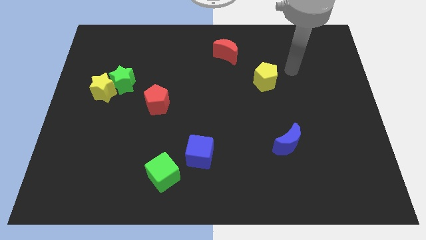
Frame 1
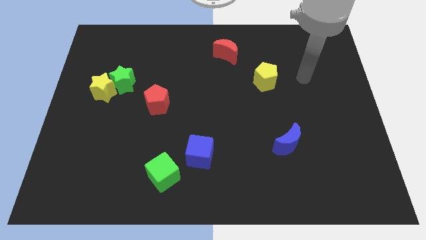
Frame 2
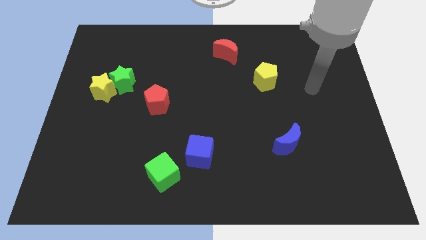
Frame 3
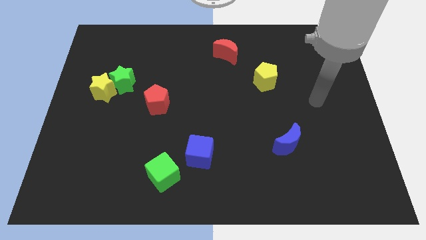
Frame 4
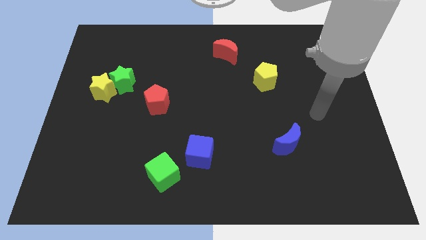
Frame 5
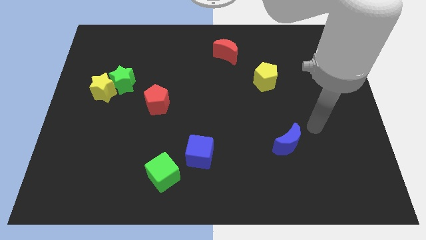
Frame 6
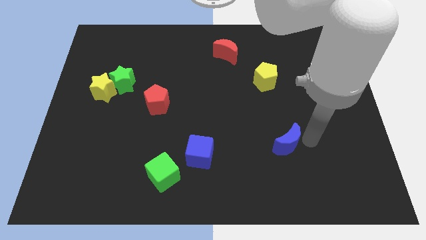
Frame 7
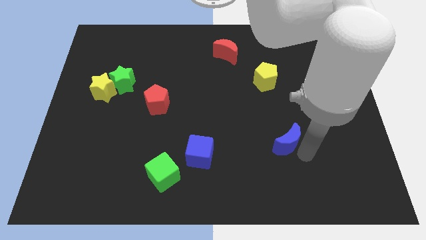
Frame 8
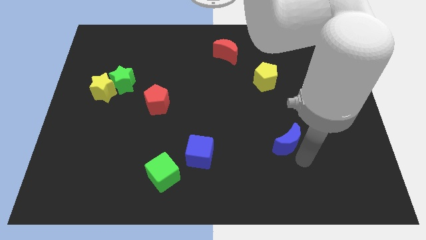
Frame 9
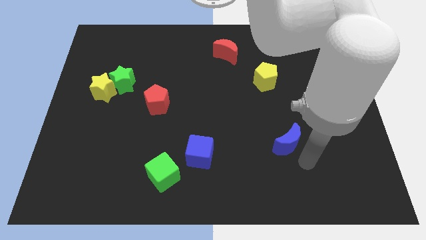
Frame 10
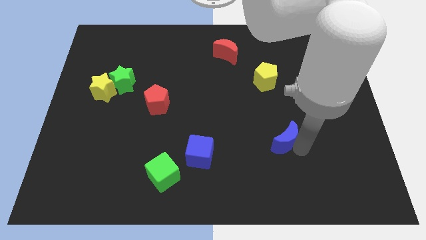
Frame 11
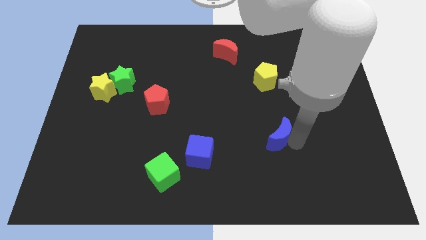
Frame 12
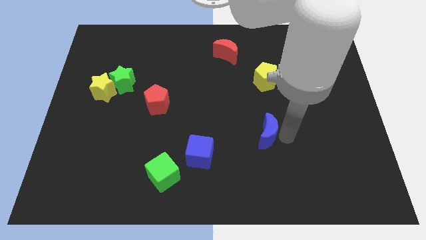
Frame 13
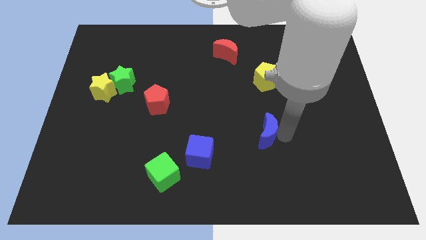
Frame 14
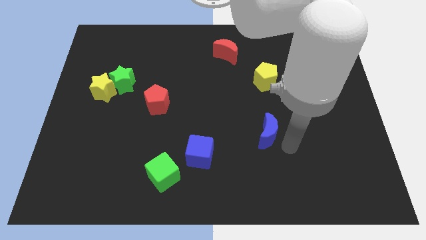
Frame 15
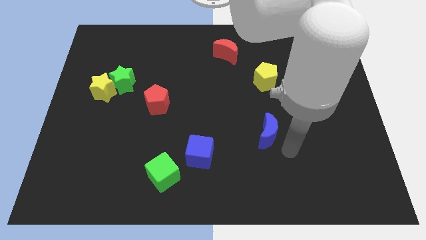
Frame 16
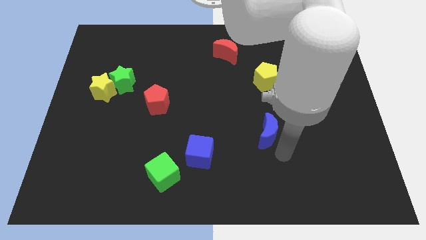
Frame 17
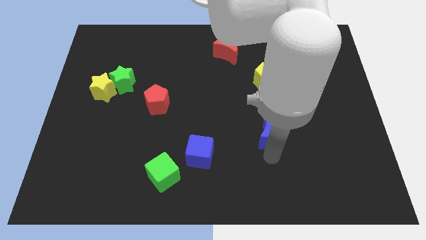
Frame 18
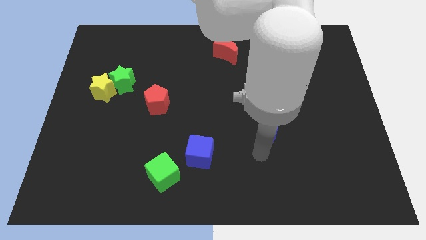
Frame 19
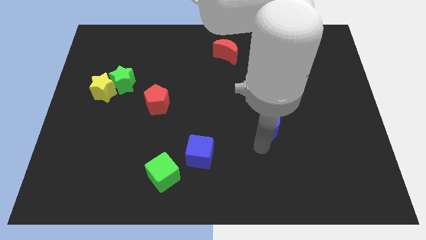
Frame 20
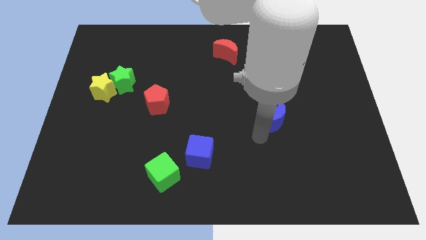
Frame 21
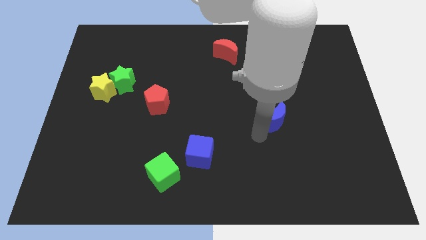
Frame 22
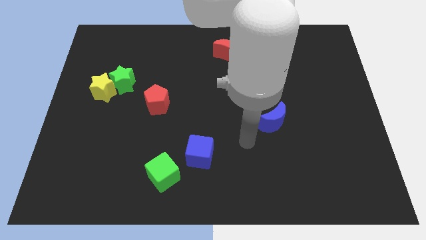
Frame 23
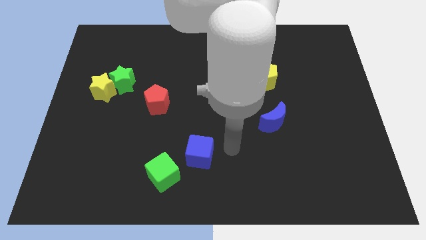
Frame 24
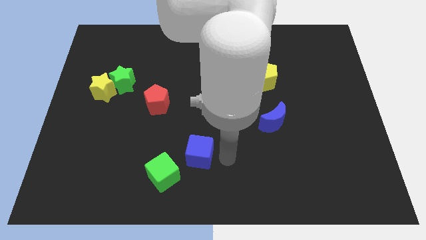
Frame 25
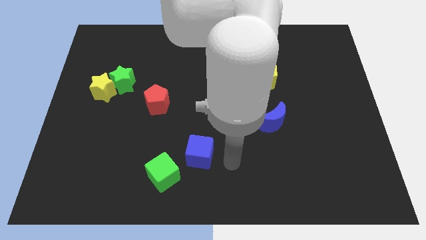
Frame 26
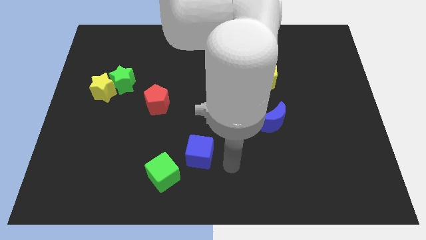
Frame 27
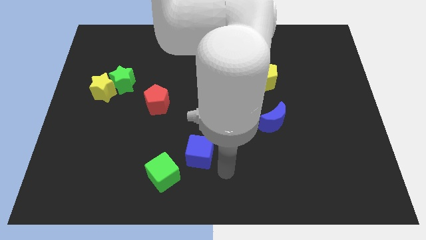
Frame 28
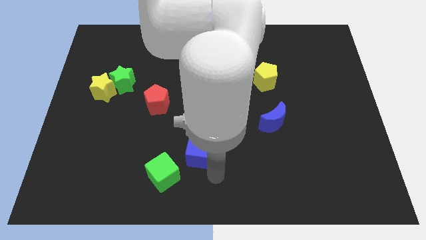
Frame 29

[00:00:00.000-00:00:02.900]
move blue crescent to the bottom of yellow pentagon

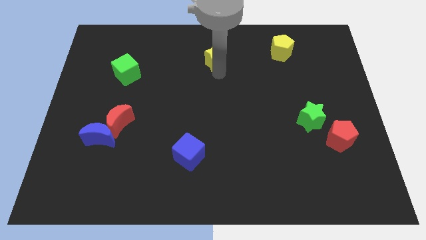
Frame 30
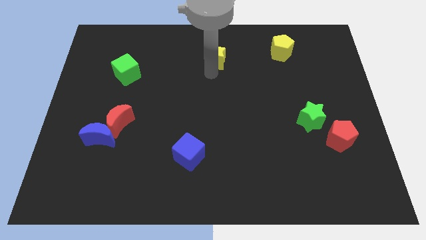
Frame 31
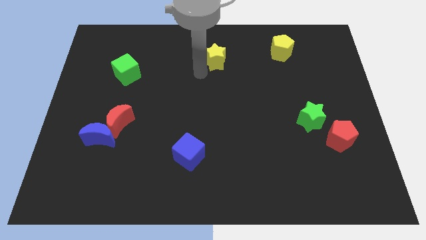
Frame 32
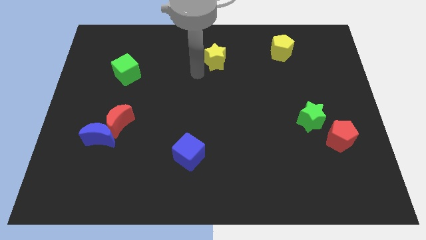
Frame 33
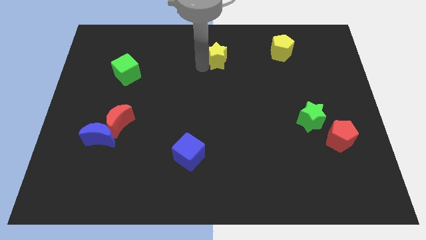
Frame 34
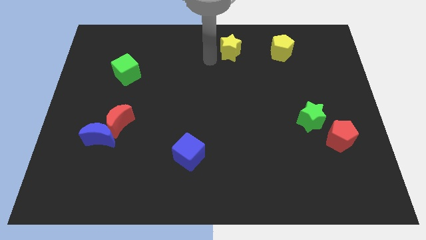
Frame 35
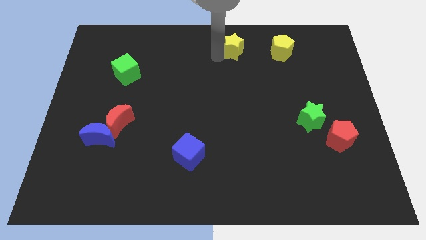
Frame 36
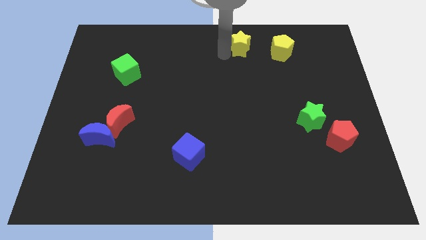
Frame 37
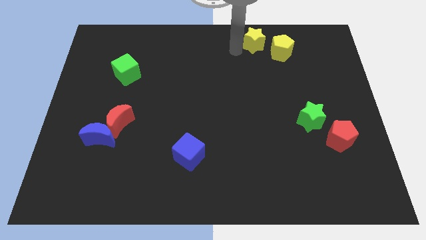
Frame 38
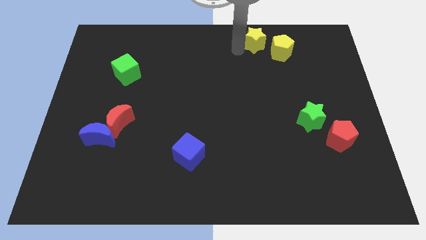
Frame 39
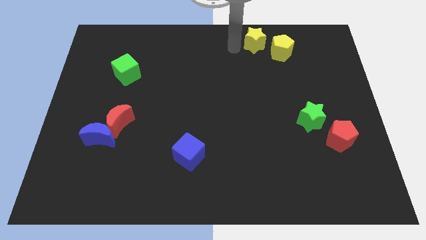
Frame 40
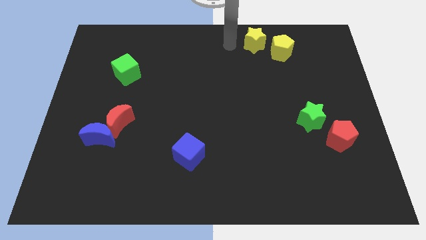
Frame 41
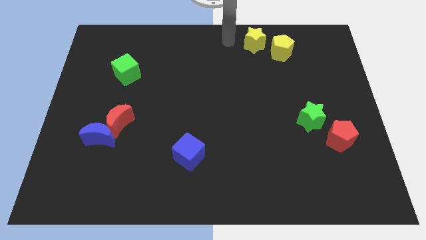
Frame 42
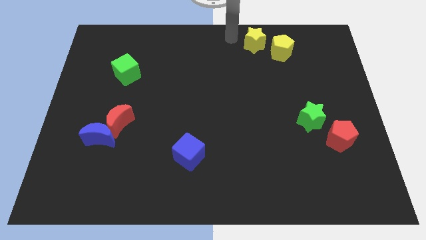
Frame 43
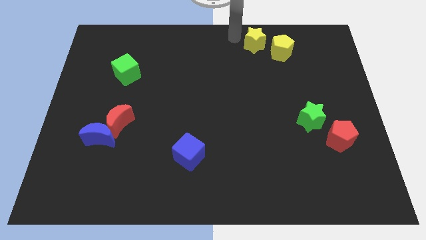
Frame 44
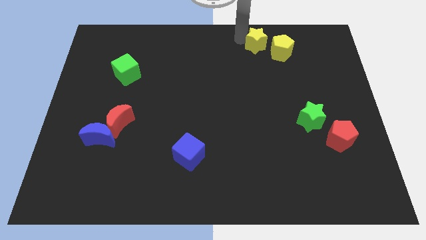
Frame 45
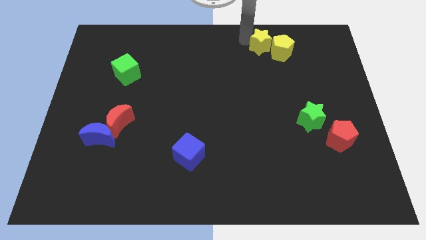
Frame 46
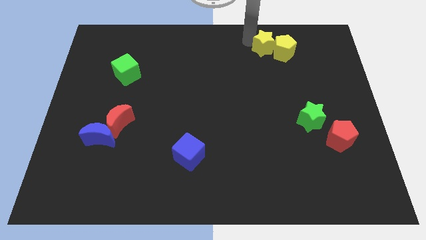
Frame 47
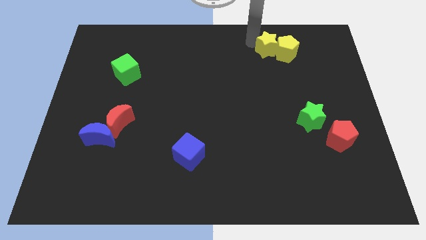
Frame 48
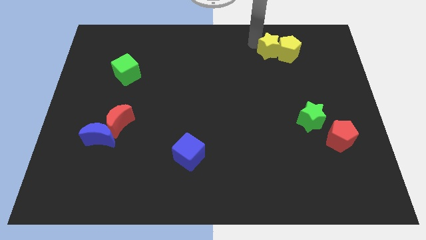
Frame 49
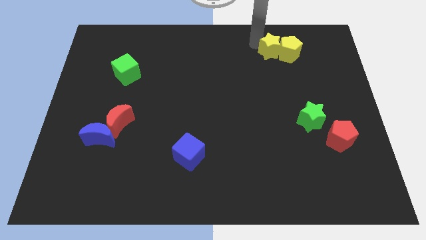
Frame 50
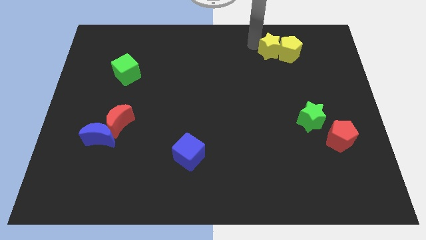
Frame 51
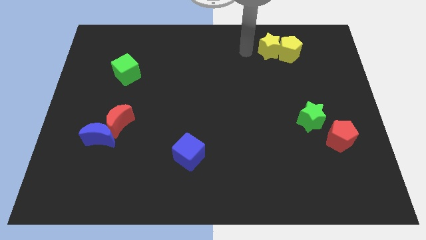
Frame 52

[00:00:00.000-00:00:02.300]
push the yellow star into the yellow pentagon

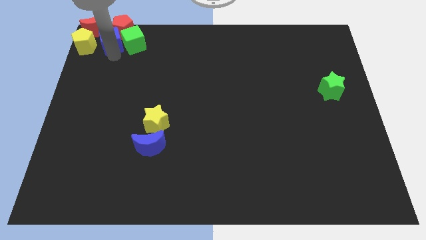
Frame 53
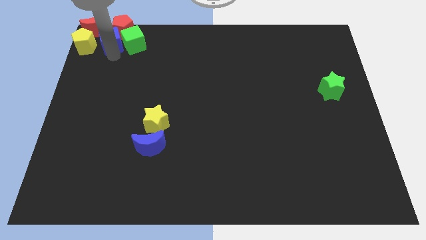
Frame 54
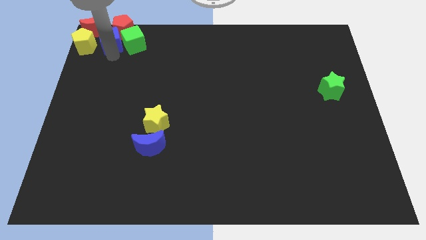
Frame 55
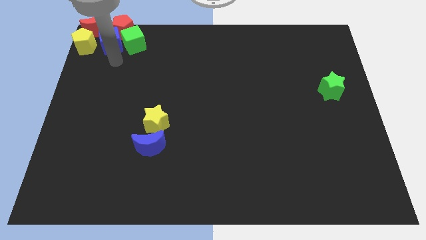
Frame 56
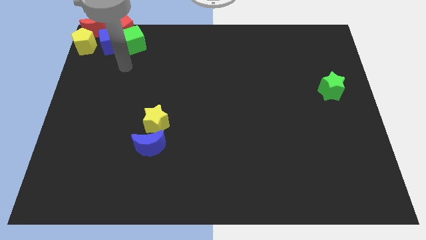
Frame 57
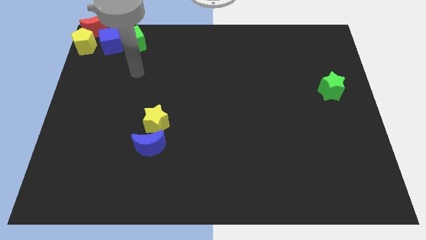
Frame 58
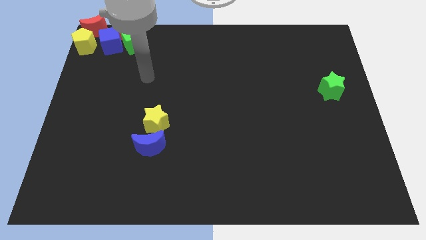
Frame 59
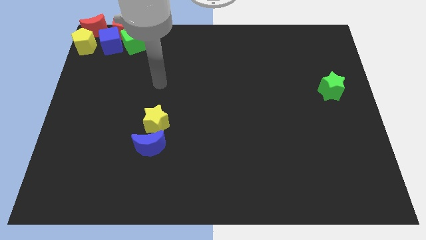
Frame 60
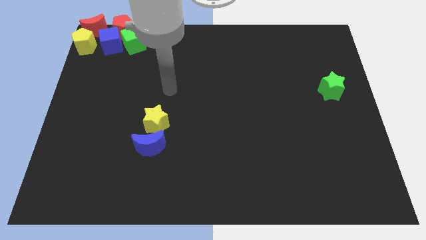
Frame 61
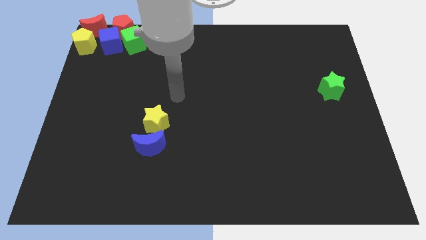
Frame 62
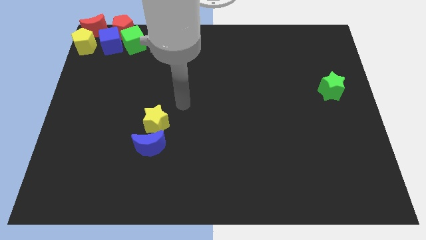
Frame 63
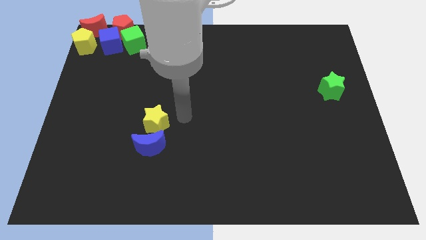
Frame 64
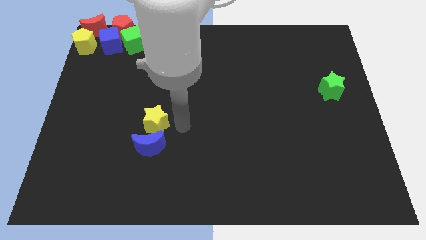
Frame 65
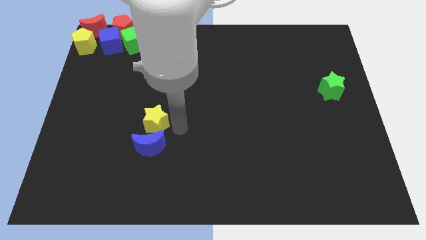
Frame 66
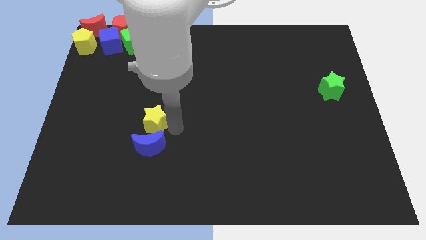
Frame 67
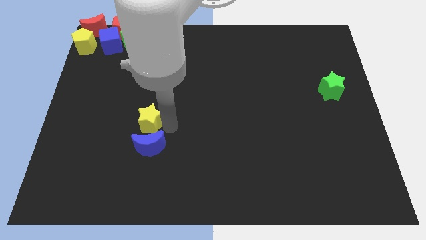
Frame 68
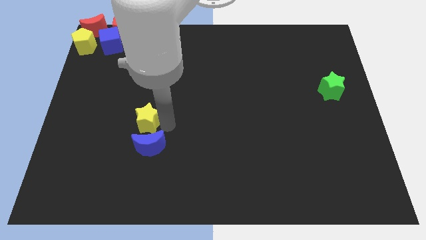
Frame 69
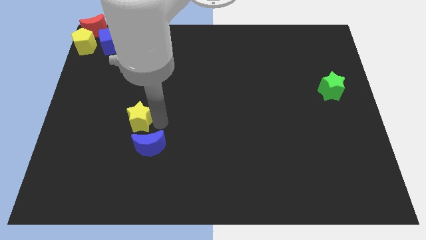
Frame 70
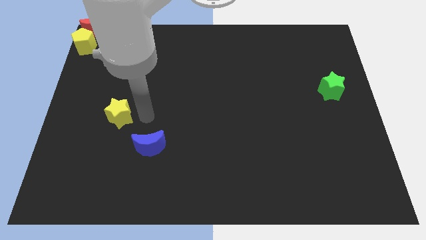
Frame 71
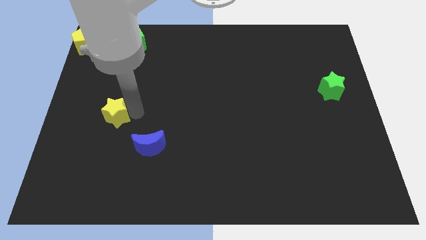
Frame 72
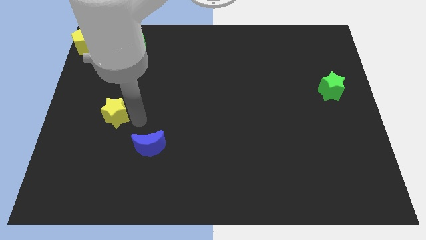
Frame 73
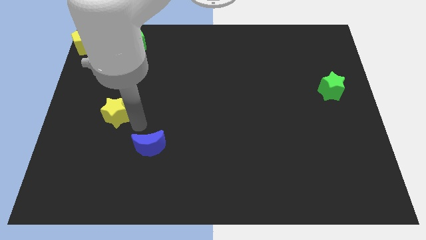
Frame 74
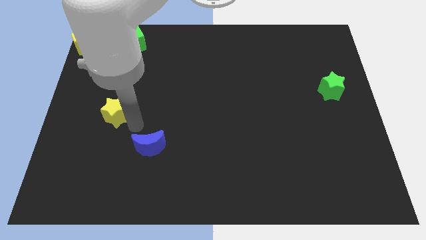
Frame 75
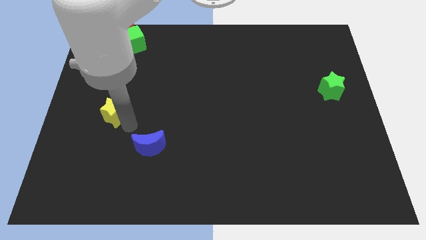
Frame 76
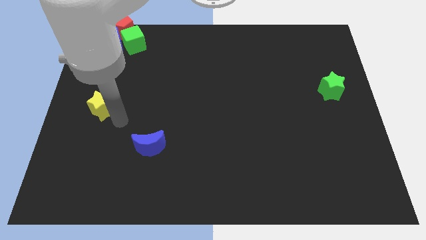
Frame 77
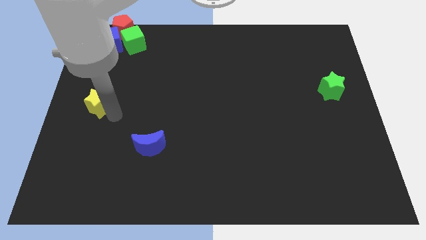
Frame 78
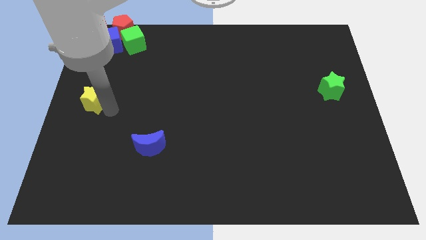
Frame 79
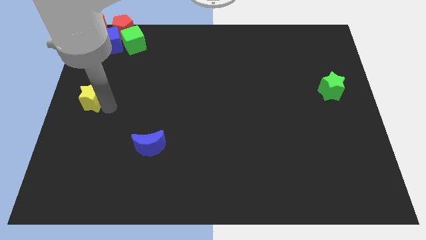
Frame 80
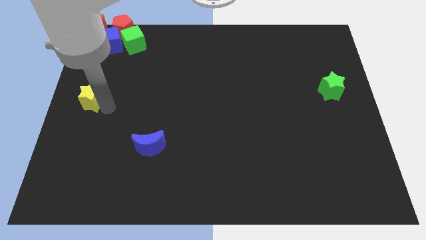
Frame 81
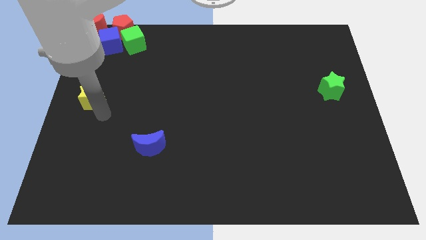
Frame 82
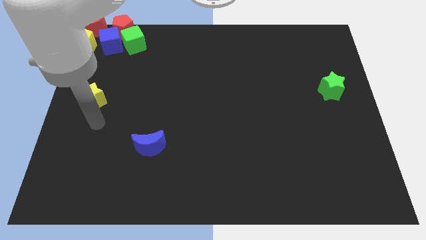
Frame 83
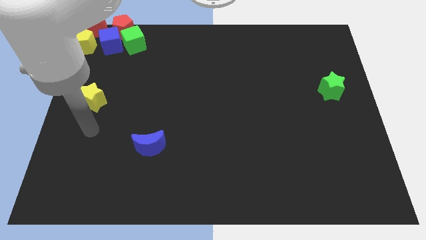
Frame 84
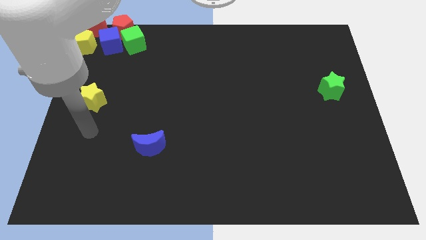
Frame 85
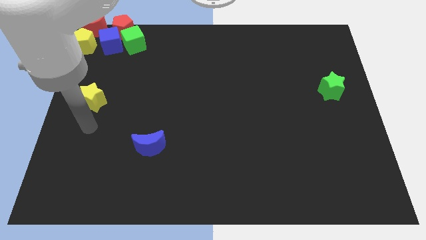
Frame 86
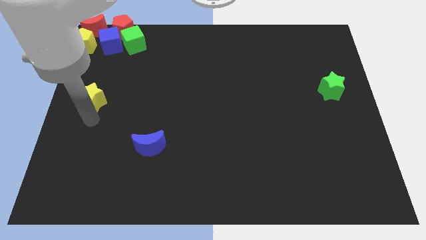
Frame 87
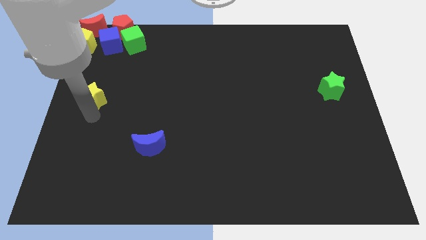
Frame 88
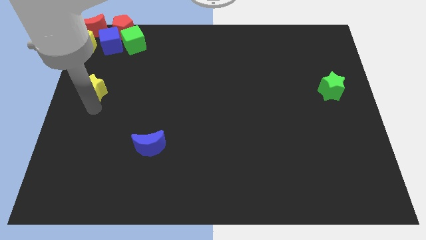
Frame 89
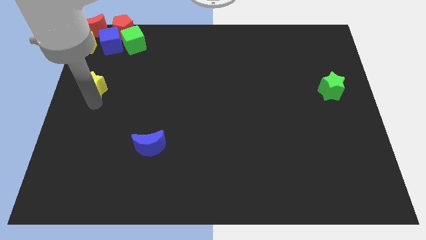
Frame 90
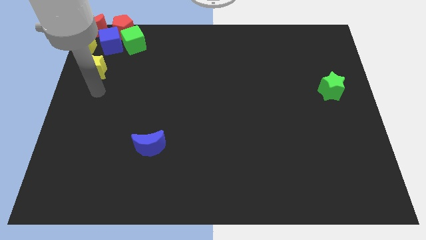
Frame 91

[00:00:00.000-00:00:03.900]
move the yellow star towards top

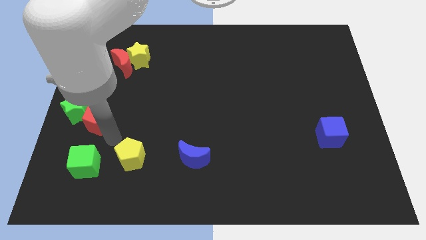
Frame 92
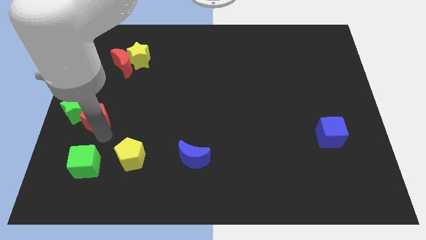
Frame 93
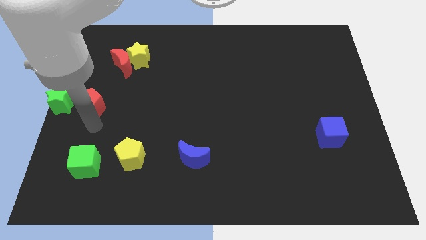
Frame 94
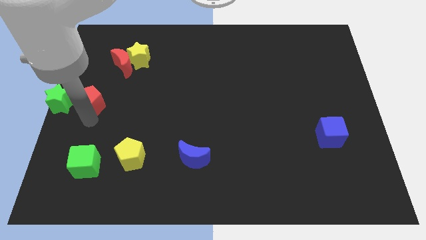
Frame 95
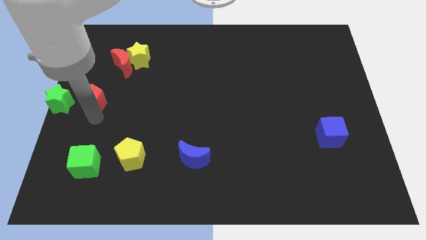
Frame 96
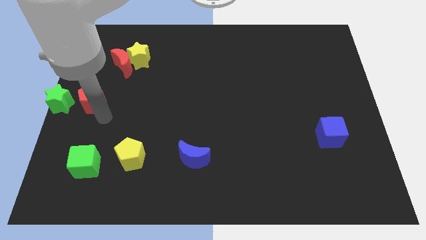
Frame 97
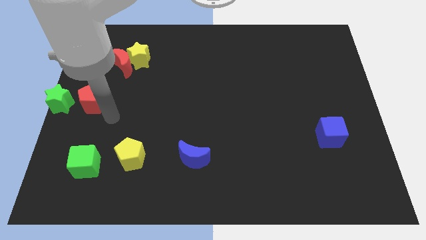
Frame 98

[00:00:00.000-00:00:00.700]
push the green star towards the left center with the help of the red pentagon
